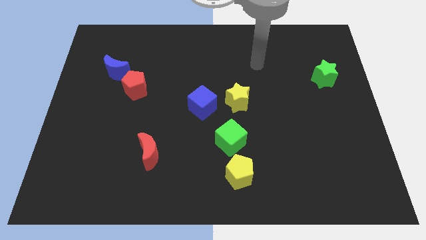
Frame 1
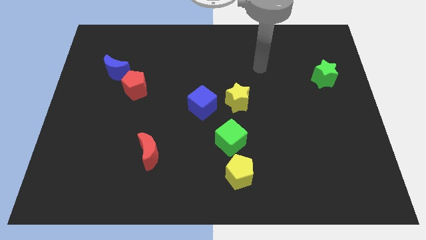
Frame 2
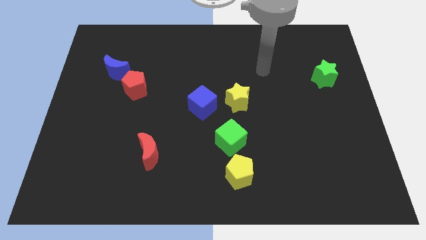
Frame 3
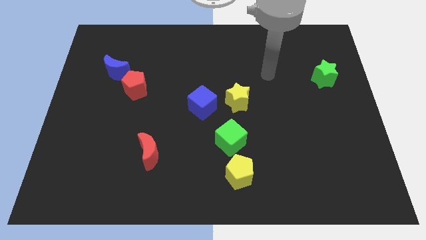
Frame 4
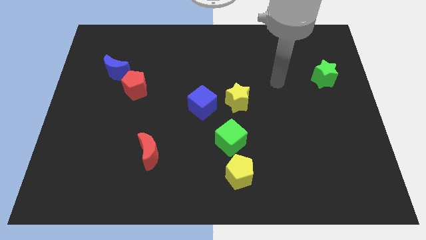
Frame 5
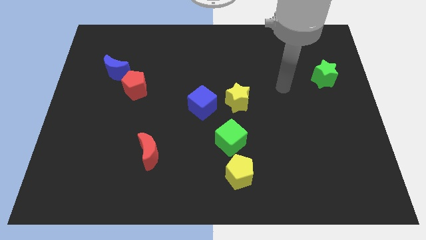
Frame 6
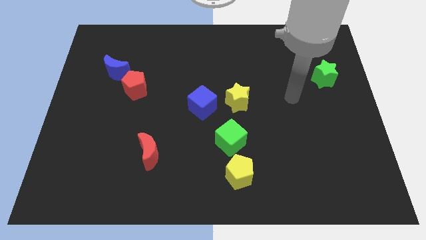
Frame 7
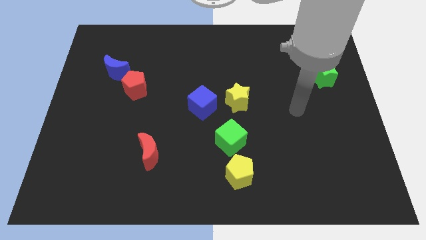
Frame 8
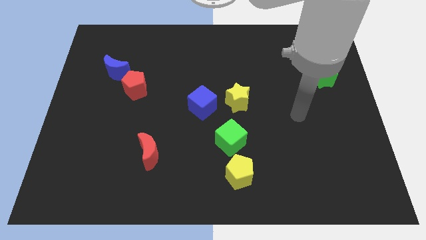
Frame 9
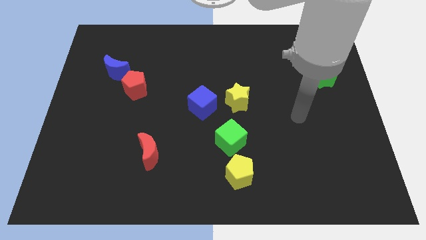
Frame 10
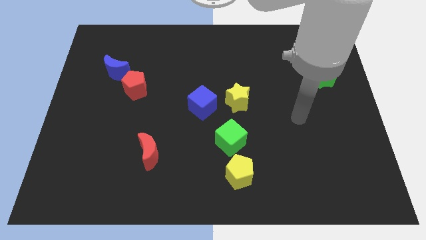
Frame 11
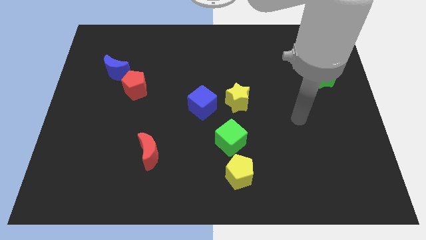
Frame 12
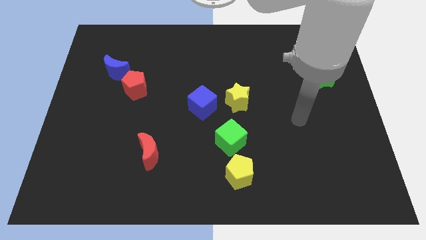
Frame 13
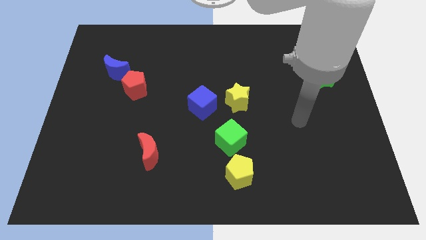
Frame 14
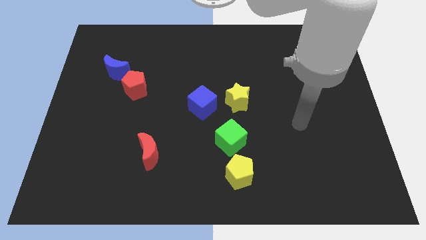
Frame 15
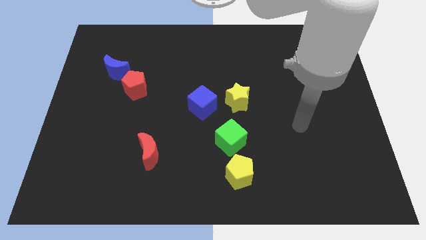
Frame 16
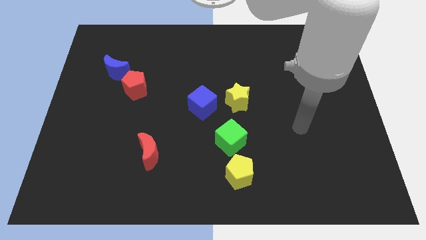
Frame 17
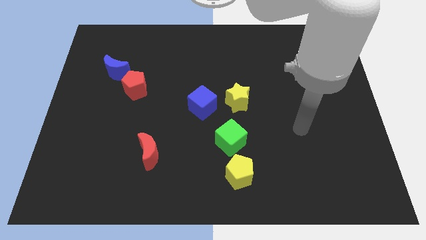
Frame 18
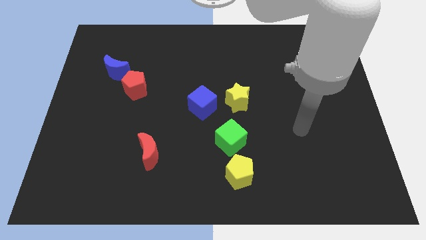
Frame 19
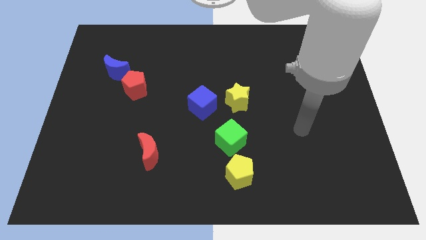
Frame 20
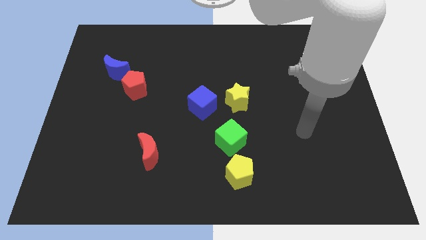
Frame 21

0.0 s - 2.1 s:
move your arm towards the bottom

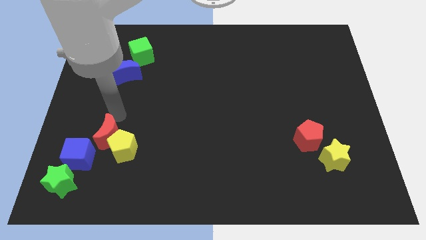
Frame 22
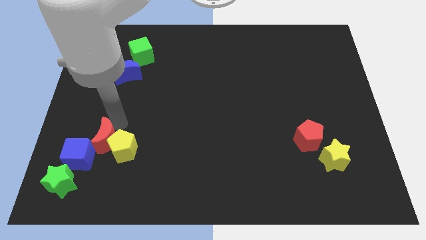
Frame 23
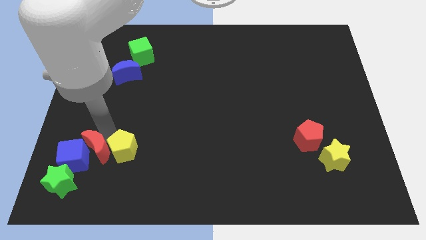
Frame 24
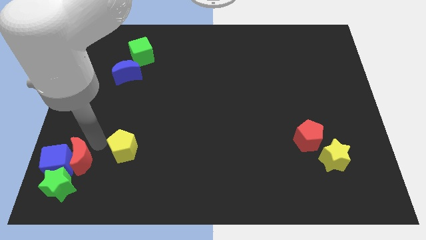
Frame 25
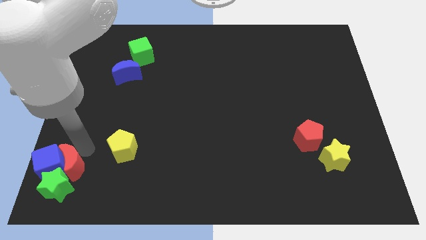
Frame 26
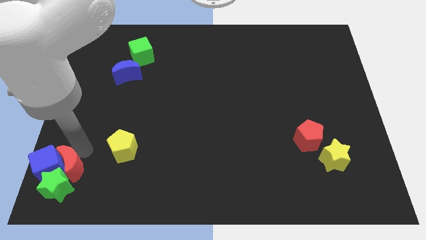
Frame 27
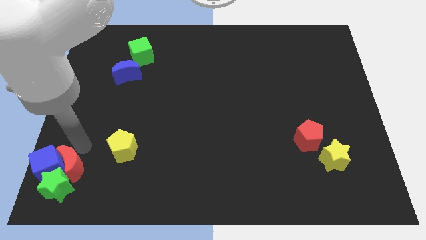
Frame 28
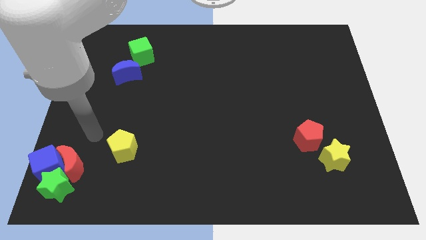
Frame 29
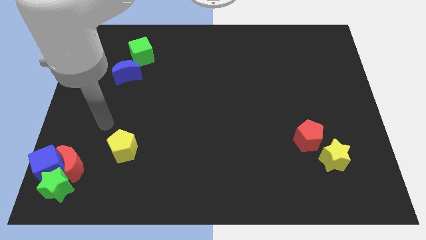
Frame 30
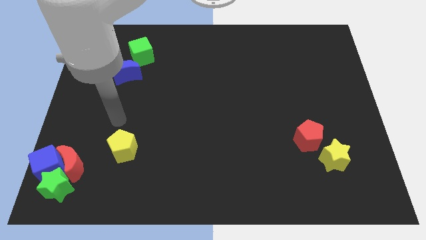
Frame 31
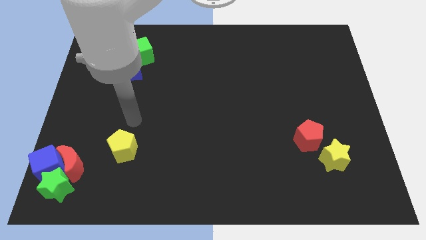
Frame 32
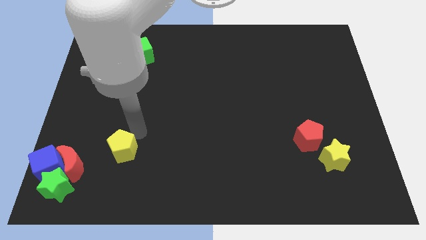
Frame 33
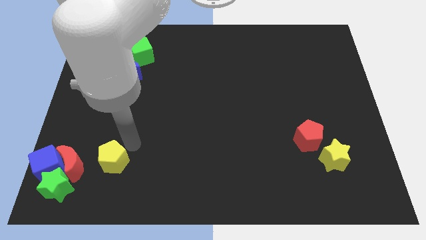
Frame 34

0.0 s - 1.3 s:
push the red moon into the blue cube

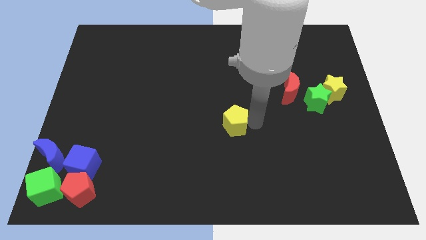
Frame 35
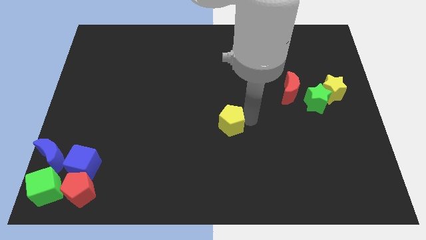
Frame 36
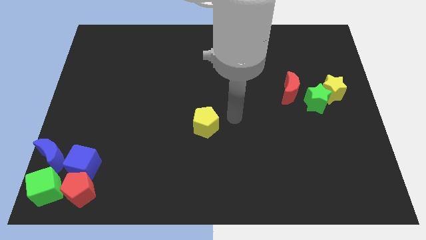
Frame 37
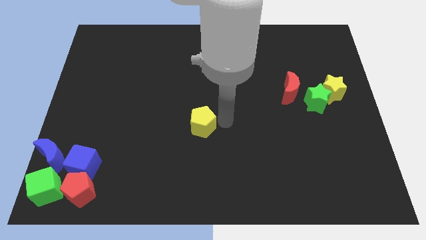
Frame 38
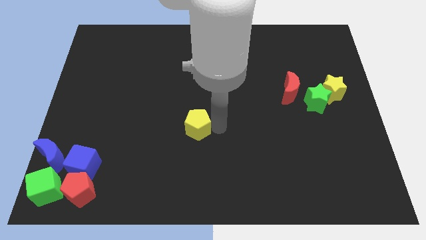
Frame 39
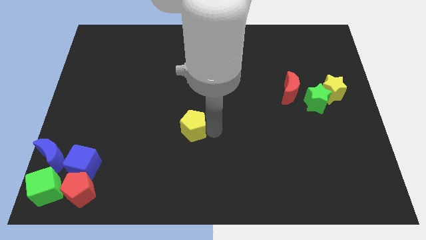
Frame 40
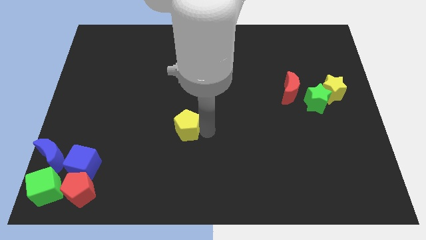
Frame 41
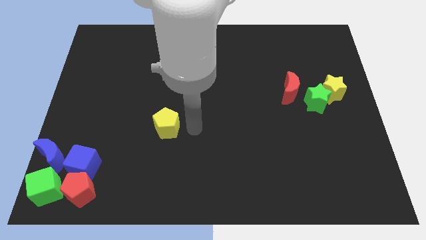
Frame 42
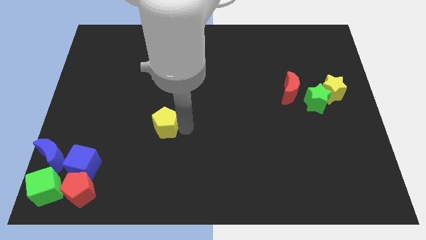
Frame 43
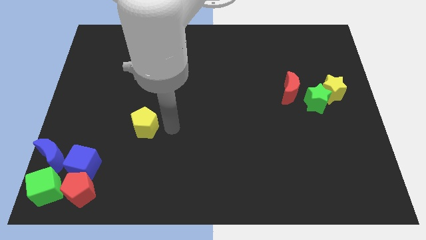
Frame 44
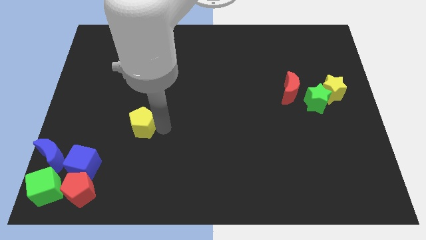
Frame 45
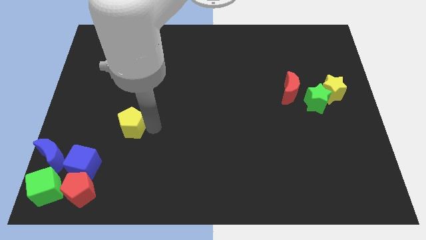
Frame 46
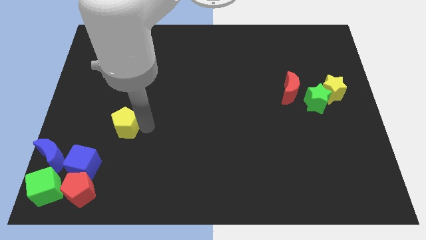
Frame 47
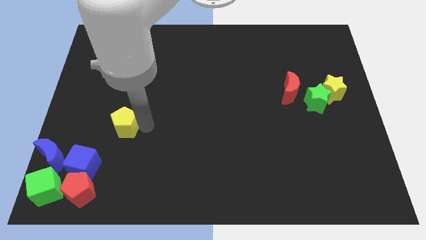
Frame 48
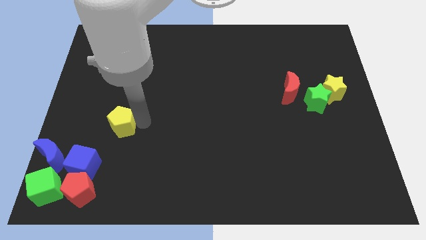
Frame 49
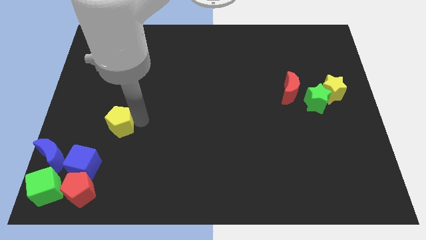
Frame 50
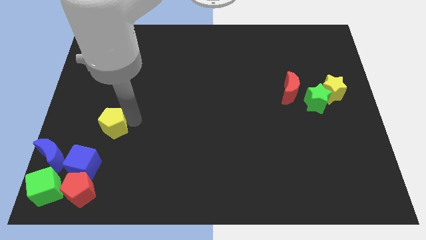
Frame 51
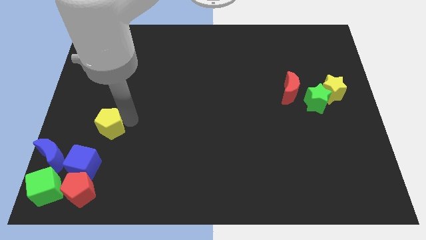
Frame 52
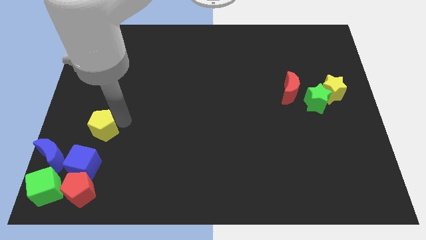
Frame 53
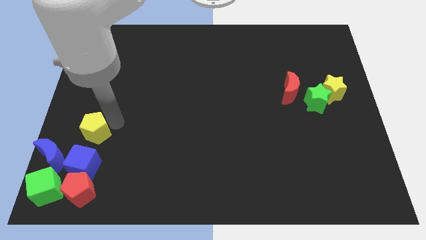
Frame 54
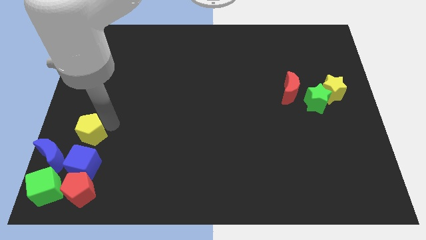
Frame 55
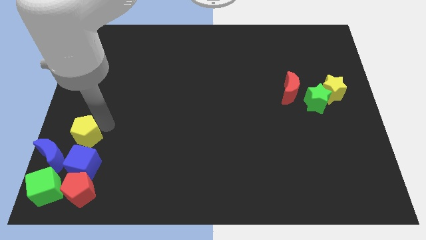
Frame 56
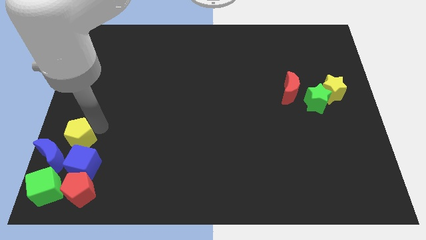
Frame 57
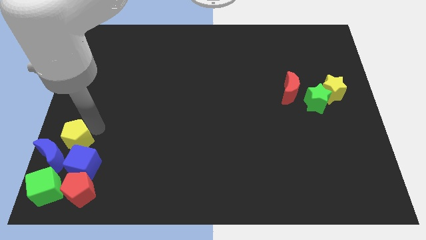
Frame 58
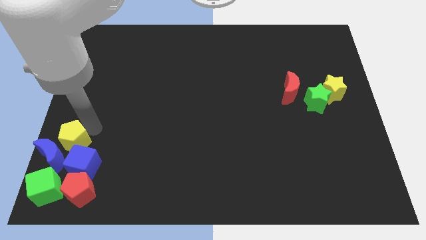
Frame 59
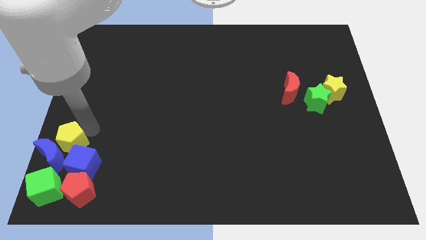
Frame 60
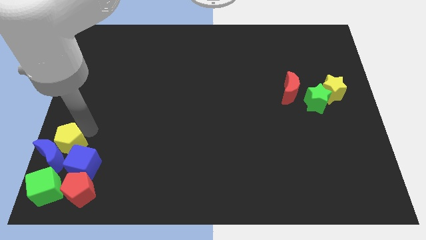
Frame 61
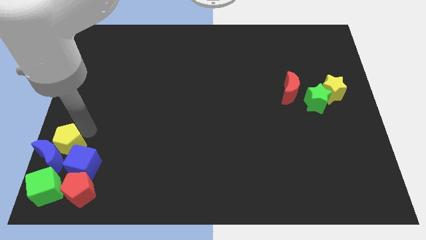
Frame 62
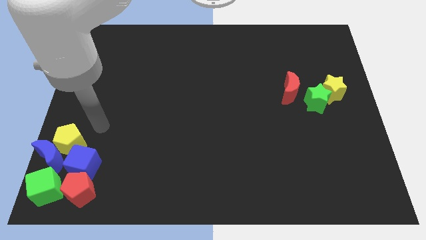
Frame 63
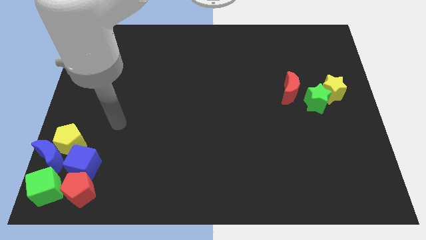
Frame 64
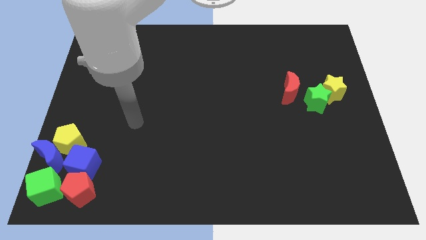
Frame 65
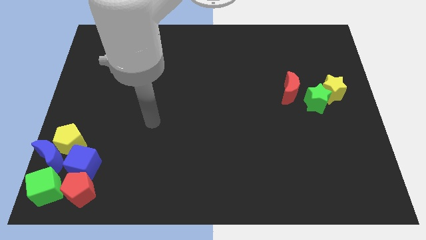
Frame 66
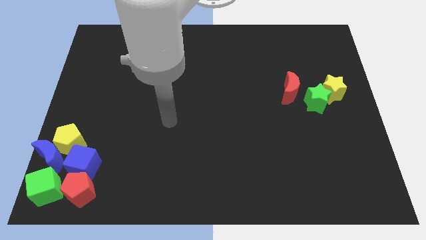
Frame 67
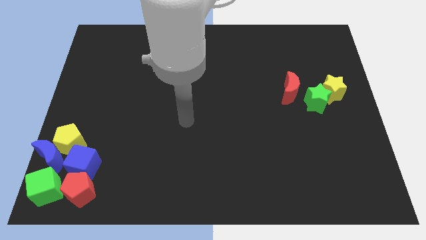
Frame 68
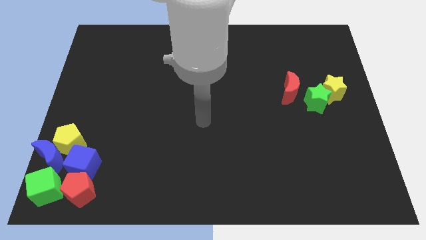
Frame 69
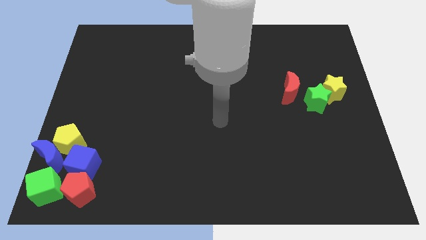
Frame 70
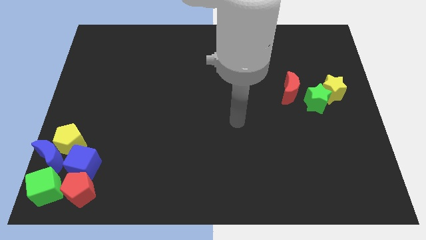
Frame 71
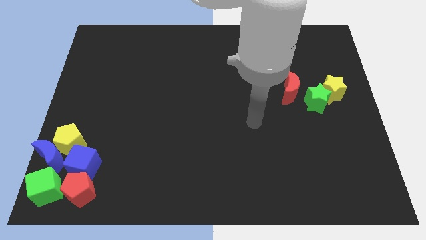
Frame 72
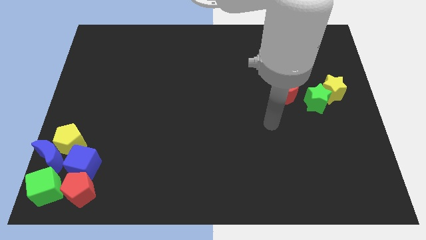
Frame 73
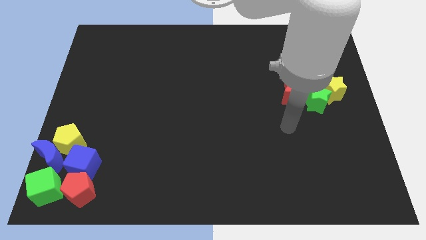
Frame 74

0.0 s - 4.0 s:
move the yellow pentagon to the top left of the blue cube

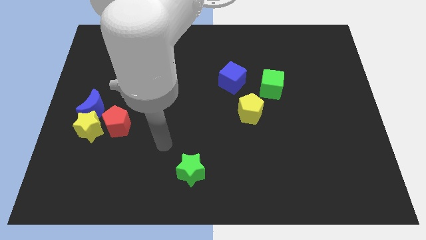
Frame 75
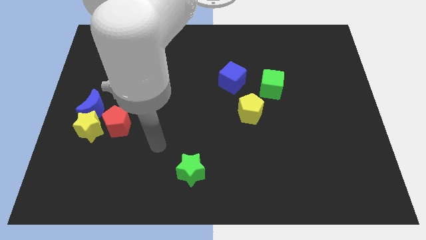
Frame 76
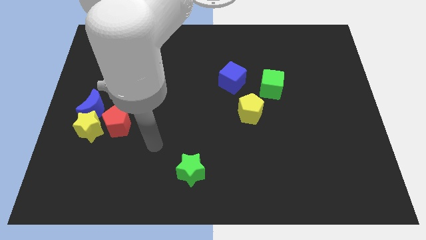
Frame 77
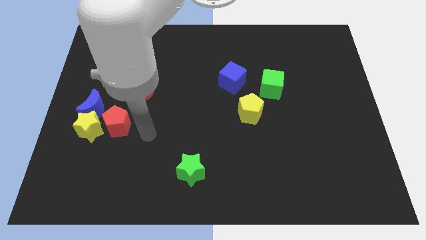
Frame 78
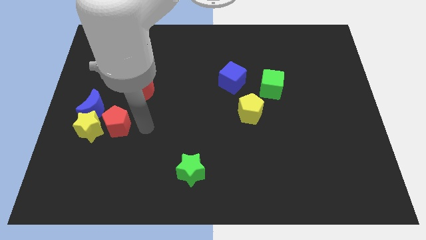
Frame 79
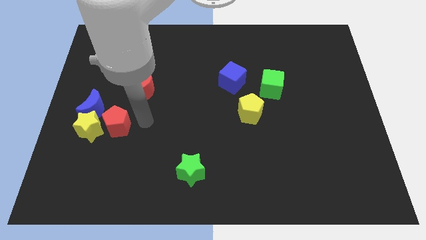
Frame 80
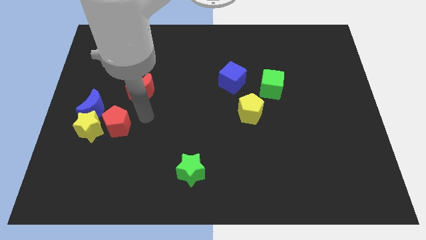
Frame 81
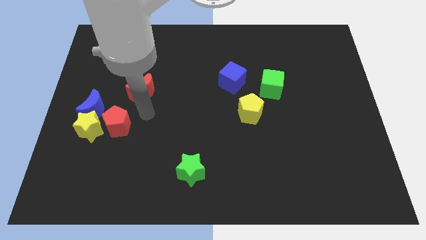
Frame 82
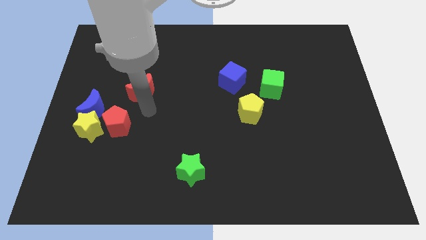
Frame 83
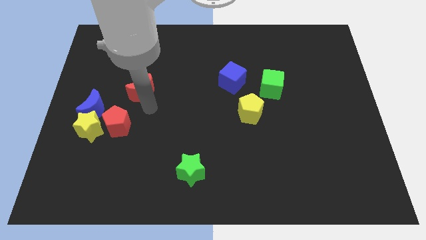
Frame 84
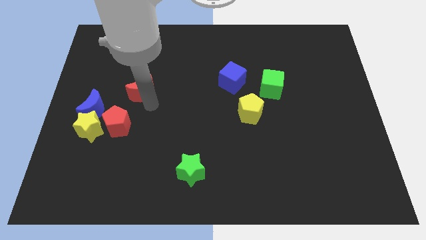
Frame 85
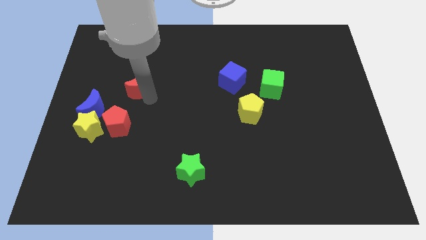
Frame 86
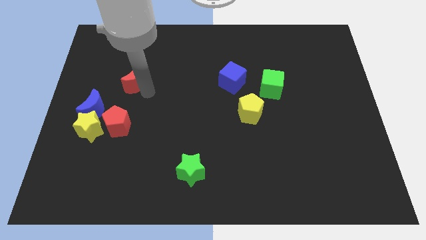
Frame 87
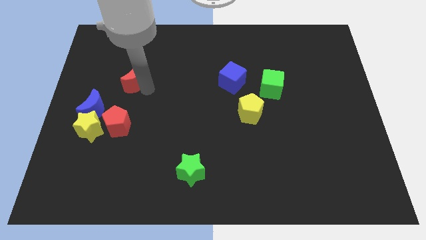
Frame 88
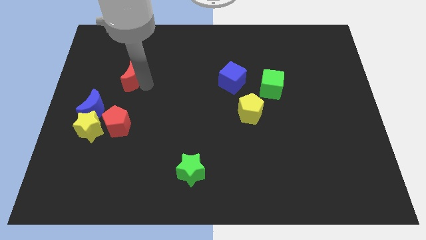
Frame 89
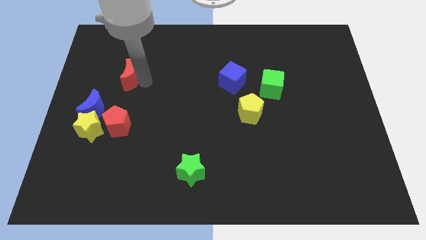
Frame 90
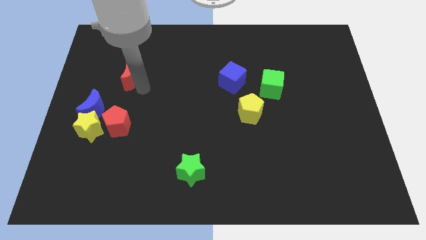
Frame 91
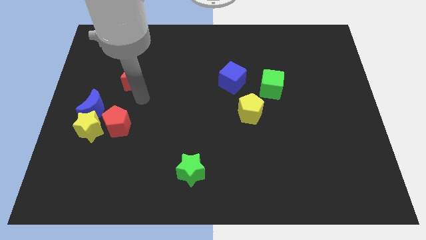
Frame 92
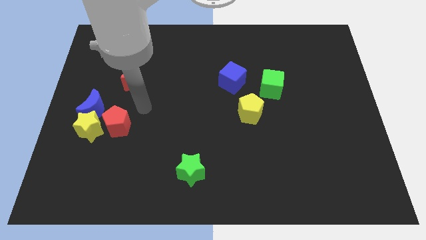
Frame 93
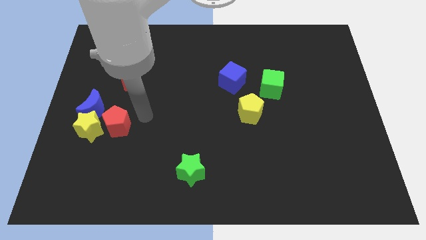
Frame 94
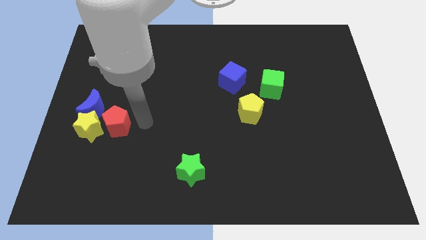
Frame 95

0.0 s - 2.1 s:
place red moon to the top of red pentagon
